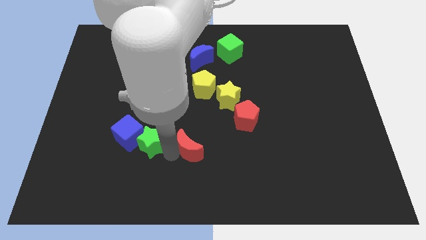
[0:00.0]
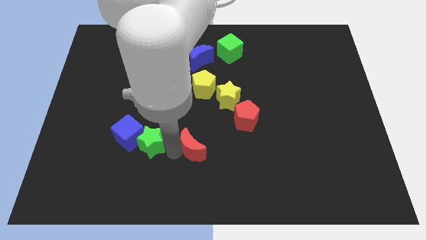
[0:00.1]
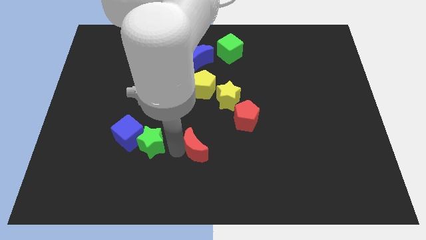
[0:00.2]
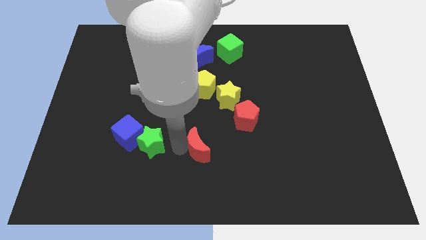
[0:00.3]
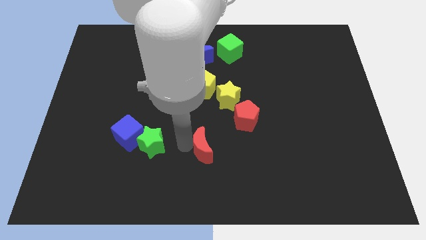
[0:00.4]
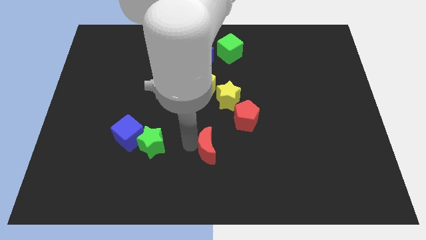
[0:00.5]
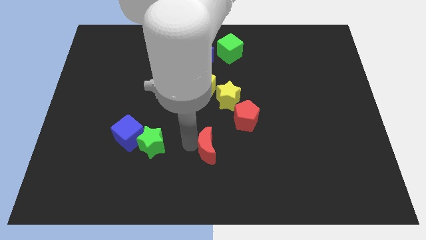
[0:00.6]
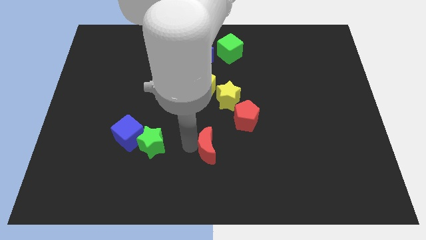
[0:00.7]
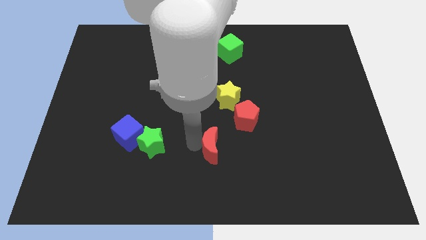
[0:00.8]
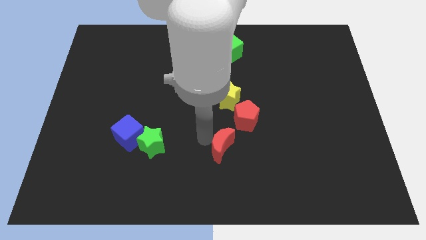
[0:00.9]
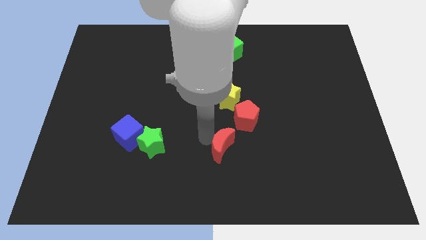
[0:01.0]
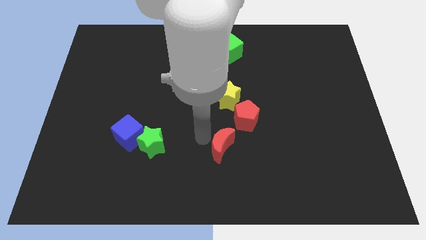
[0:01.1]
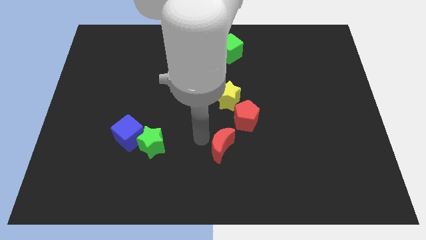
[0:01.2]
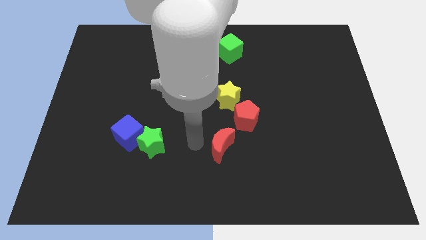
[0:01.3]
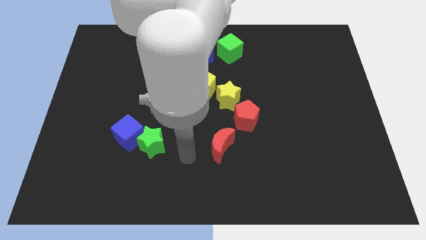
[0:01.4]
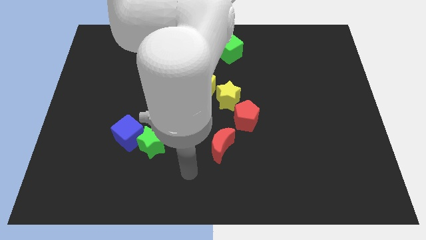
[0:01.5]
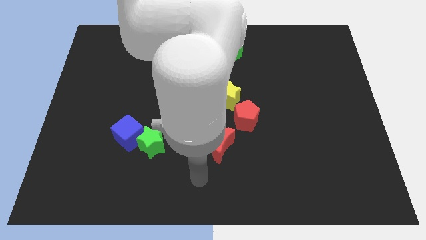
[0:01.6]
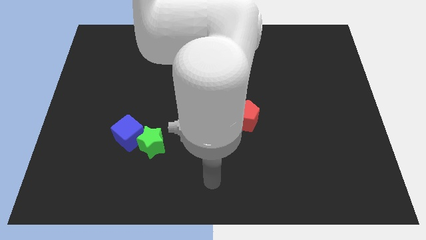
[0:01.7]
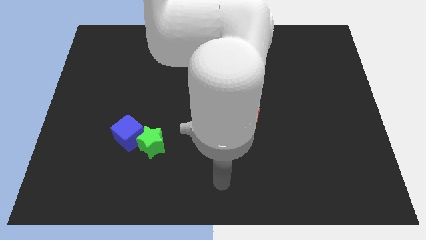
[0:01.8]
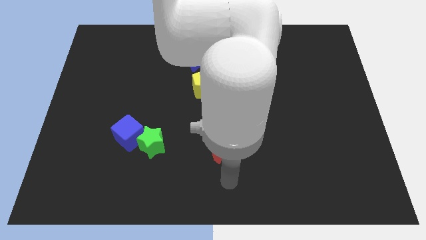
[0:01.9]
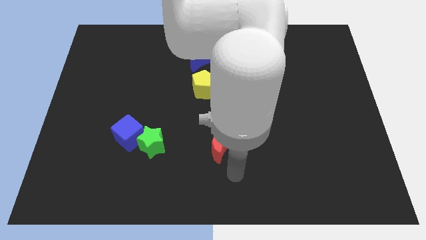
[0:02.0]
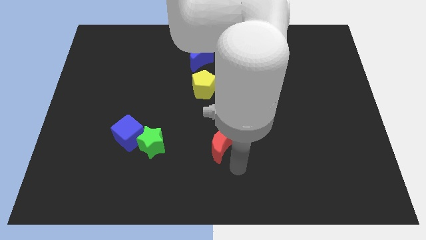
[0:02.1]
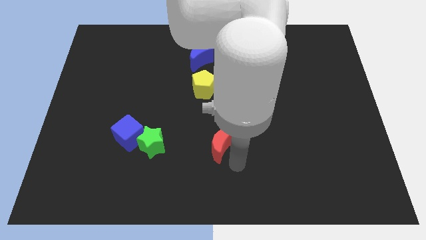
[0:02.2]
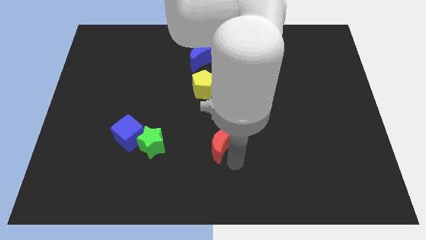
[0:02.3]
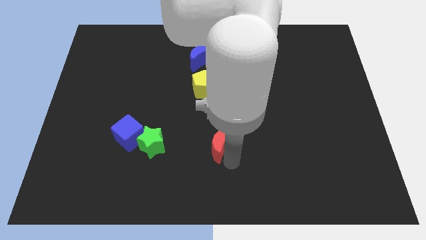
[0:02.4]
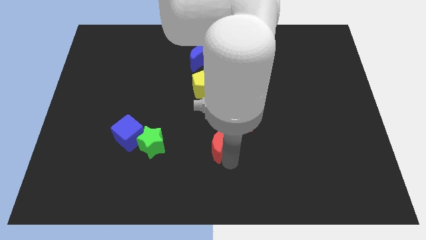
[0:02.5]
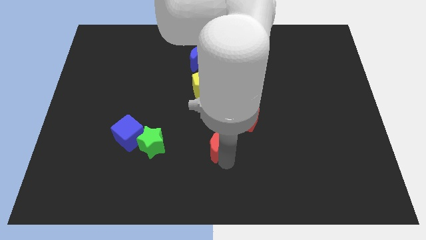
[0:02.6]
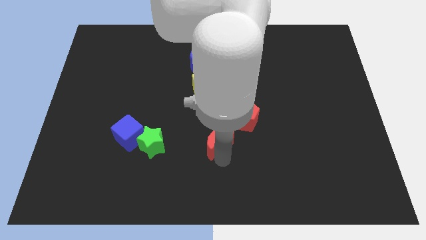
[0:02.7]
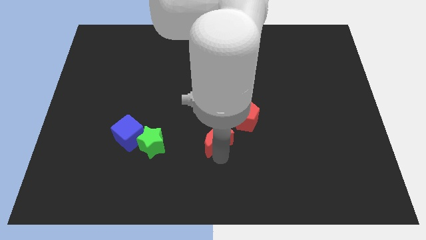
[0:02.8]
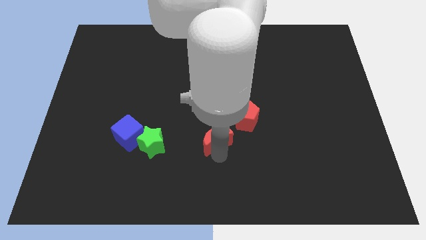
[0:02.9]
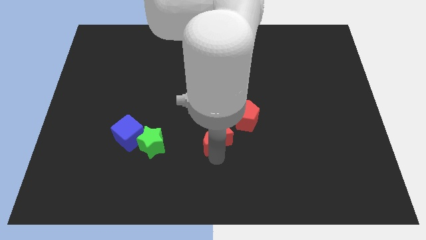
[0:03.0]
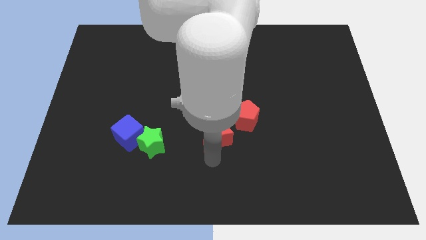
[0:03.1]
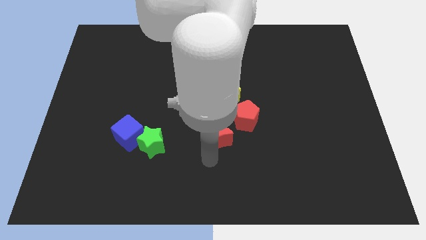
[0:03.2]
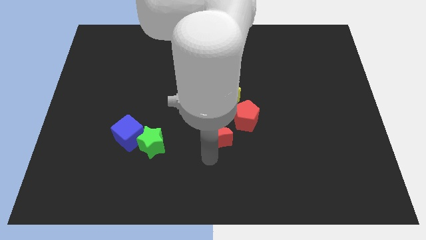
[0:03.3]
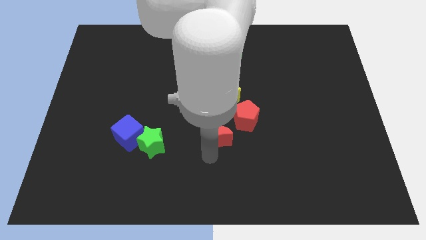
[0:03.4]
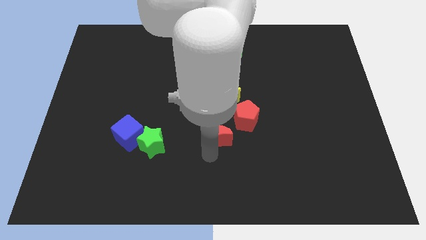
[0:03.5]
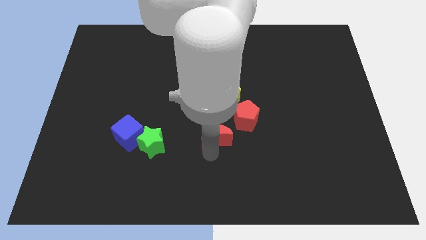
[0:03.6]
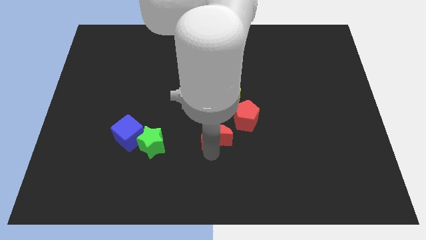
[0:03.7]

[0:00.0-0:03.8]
push the red moon to the center

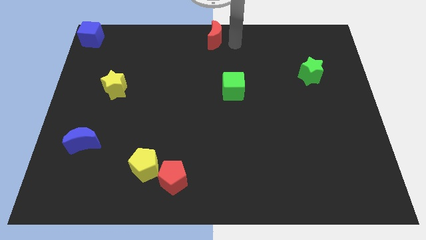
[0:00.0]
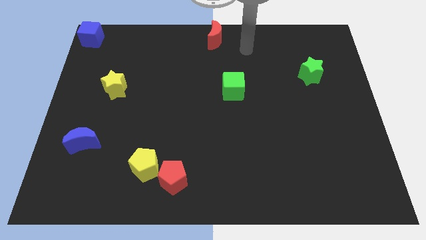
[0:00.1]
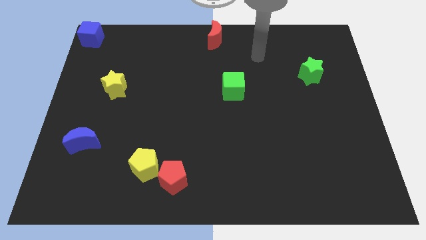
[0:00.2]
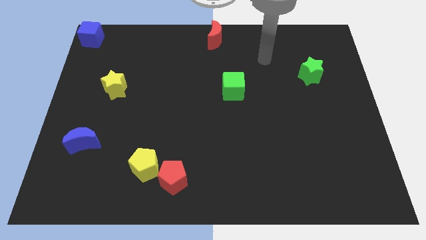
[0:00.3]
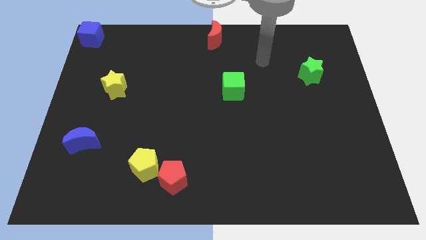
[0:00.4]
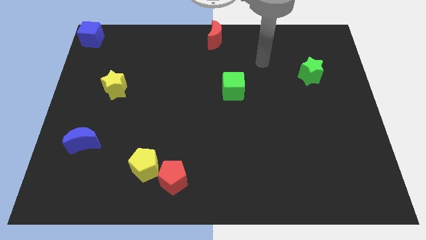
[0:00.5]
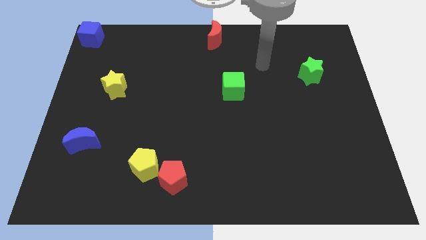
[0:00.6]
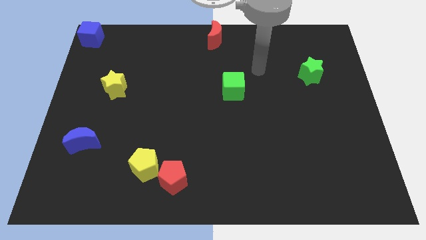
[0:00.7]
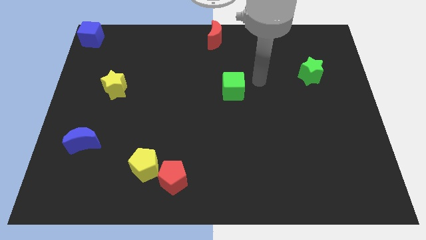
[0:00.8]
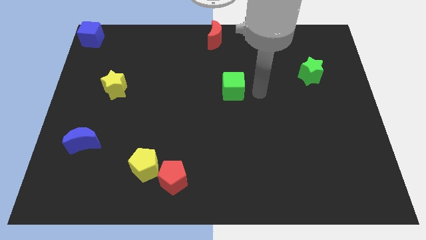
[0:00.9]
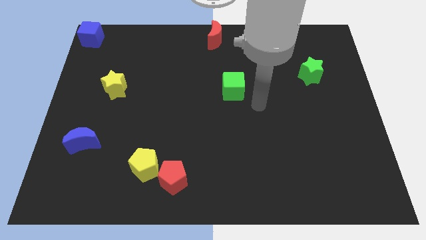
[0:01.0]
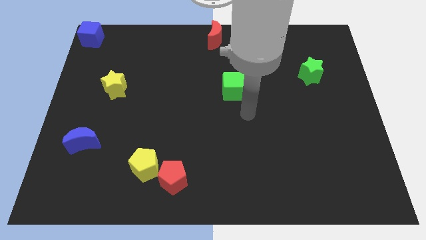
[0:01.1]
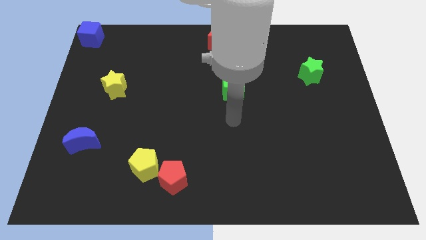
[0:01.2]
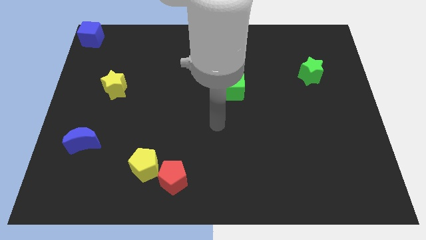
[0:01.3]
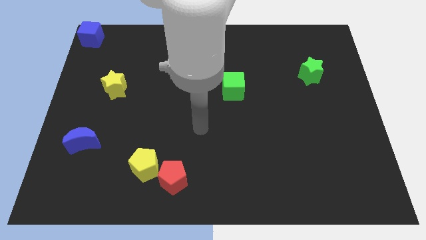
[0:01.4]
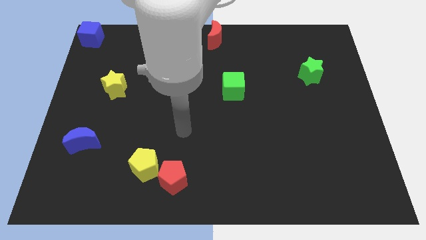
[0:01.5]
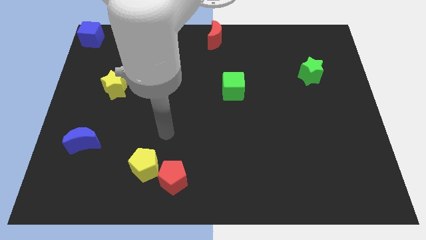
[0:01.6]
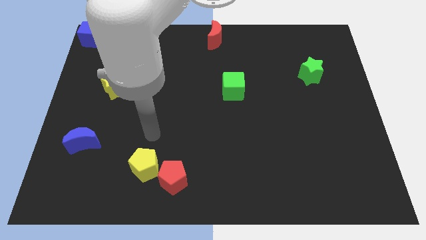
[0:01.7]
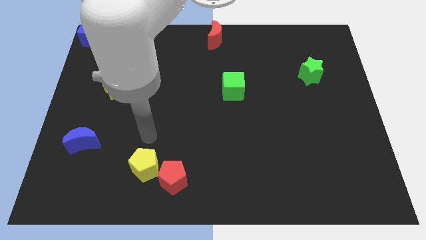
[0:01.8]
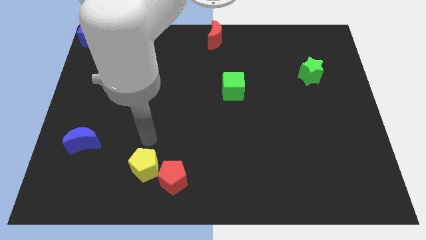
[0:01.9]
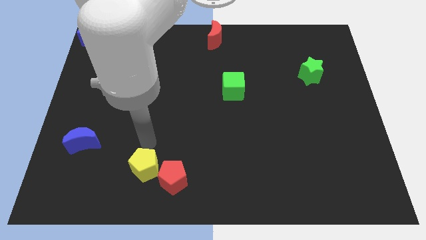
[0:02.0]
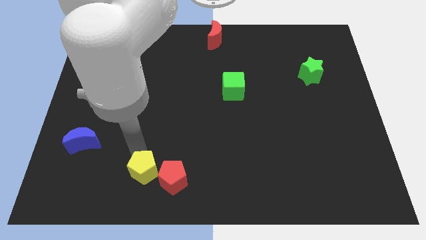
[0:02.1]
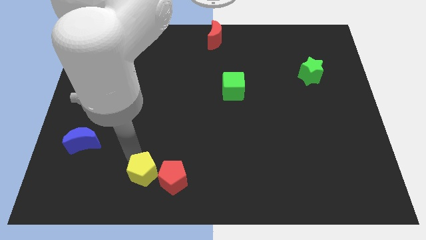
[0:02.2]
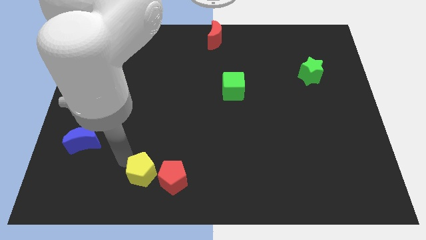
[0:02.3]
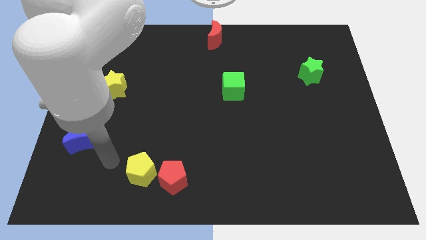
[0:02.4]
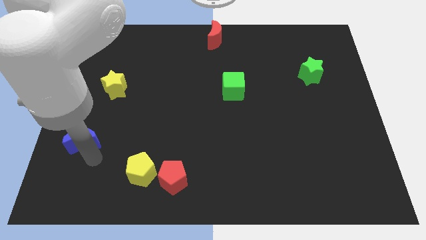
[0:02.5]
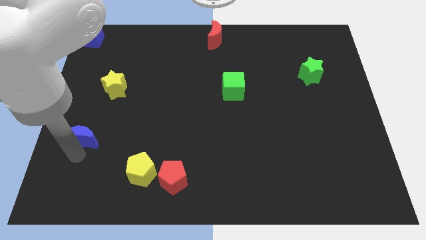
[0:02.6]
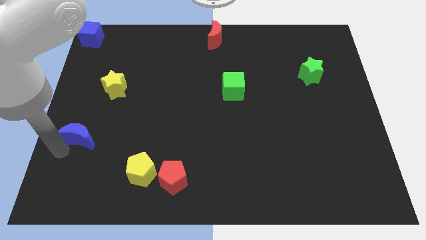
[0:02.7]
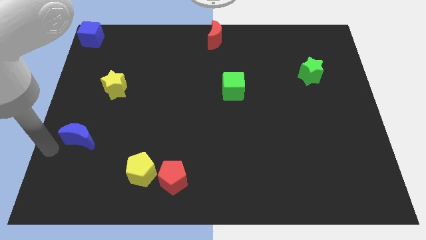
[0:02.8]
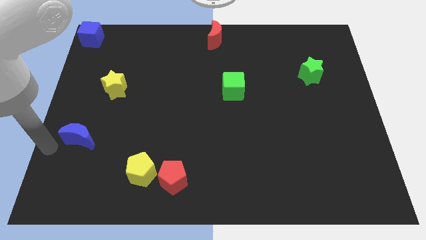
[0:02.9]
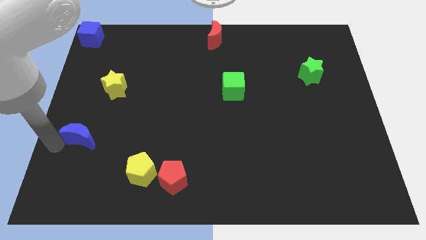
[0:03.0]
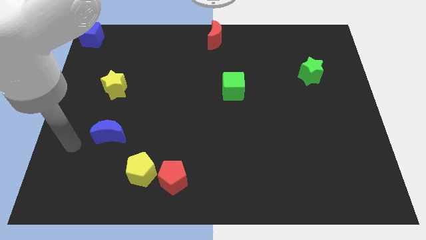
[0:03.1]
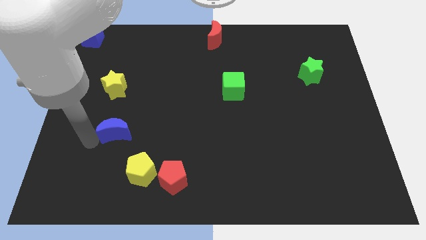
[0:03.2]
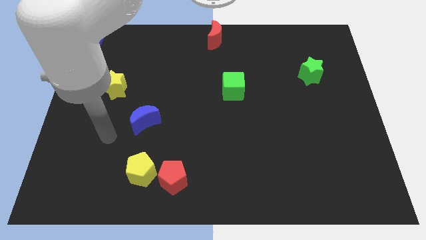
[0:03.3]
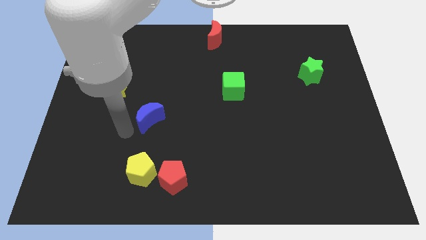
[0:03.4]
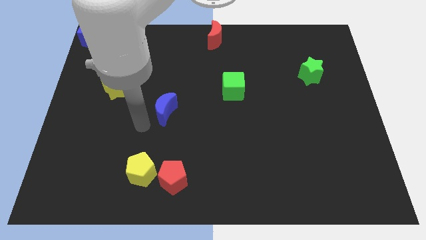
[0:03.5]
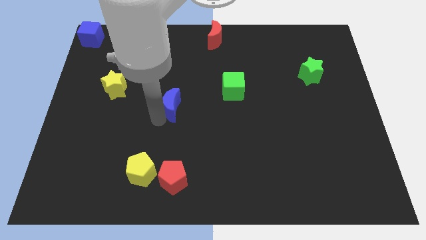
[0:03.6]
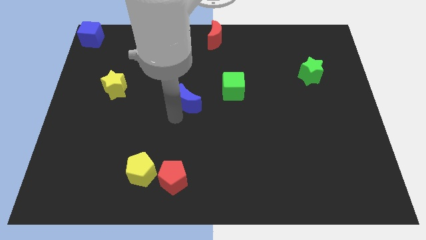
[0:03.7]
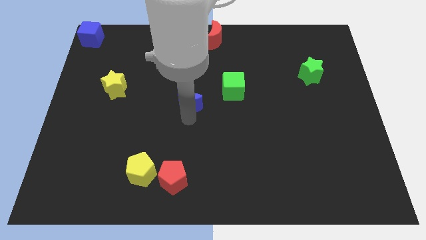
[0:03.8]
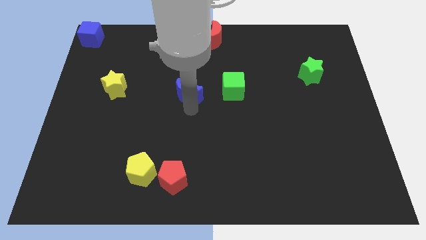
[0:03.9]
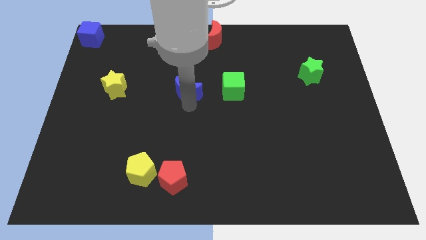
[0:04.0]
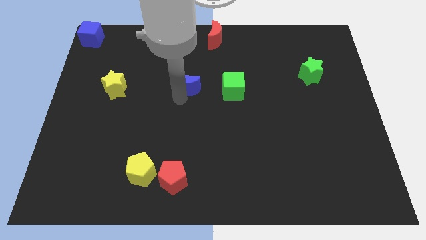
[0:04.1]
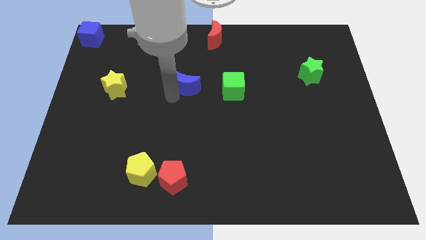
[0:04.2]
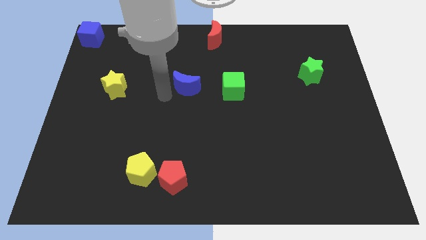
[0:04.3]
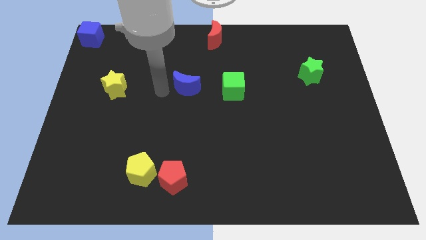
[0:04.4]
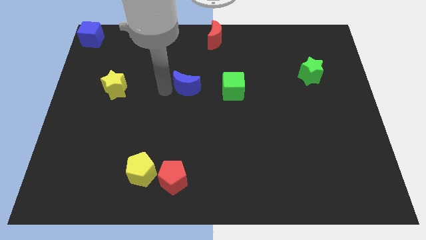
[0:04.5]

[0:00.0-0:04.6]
place the blue moon in between the yellow star and green cube

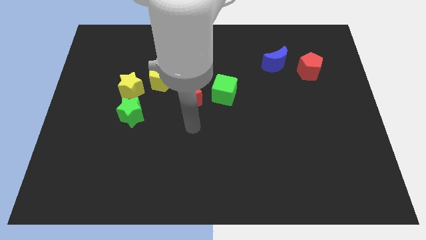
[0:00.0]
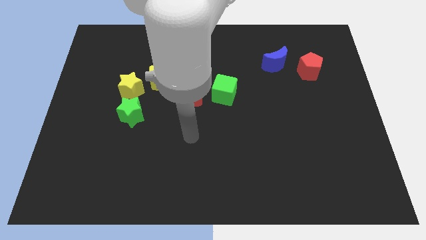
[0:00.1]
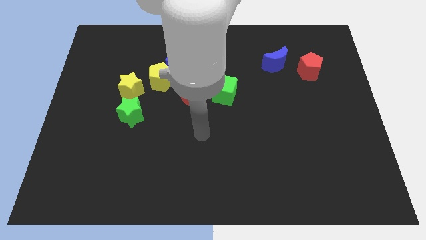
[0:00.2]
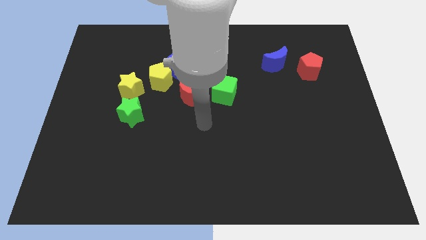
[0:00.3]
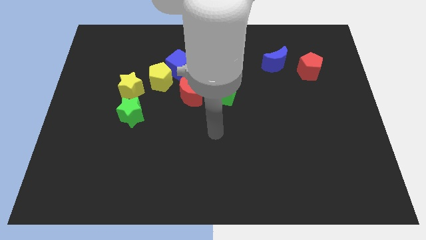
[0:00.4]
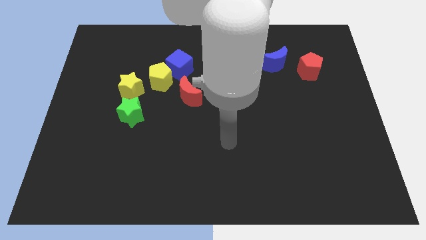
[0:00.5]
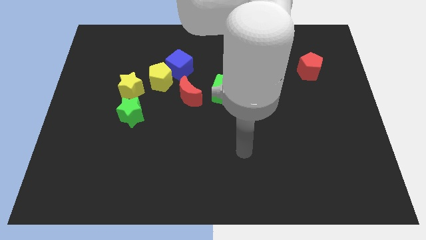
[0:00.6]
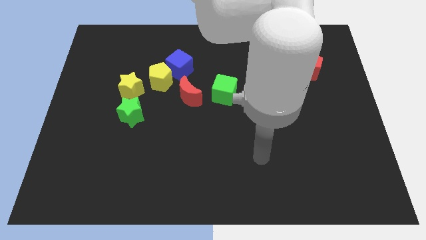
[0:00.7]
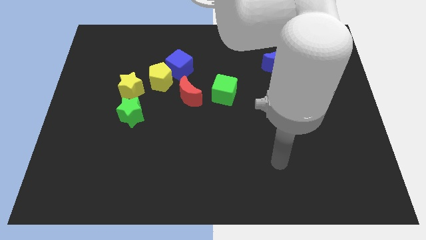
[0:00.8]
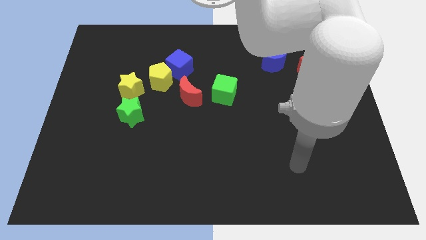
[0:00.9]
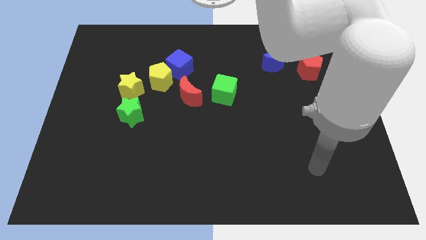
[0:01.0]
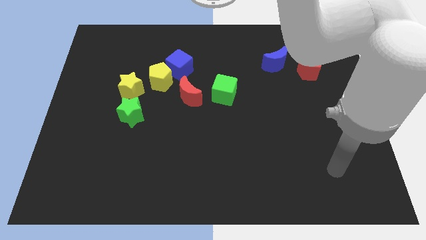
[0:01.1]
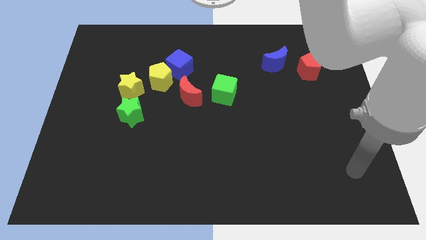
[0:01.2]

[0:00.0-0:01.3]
move your hand towards the bottom right
